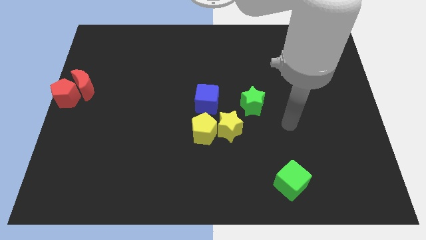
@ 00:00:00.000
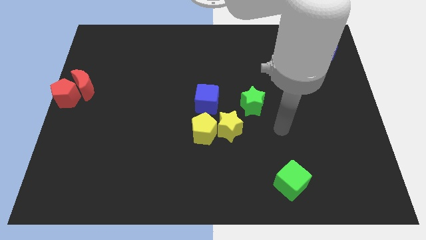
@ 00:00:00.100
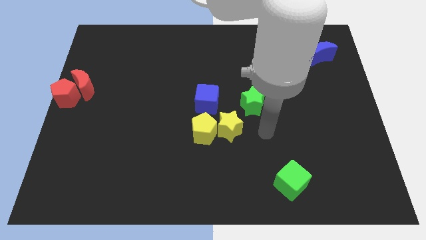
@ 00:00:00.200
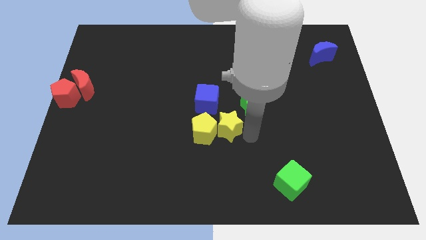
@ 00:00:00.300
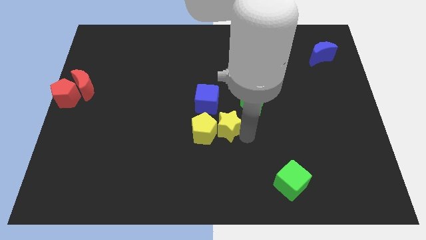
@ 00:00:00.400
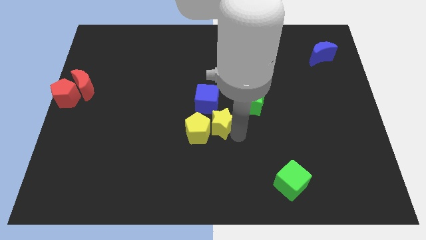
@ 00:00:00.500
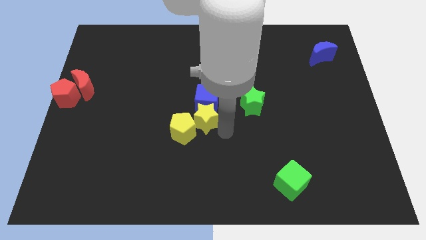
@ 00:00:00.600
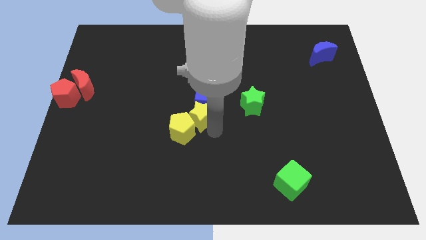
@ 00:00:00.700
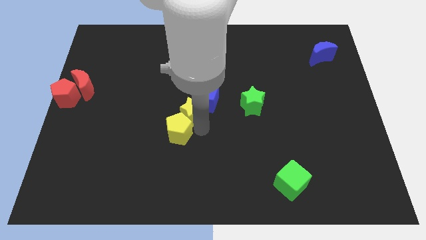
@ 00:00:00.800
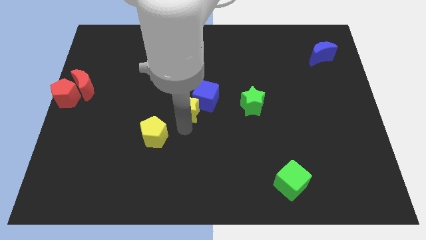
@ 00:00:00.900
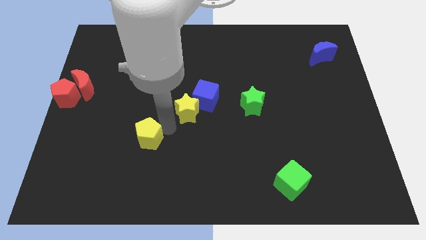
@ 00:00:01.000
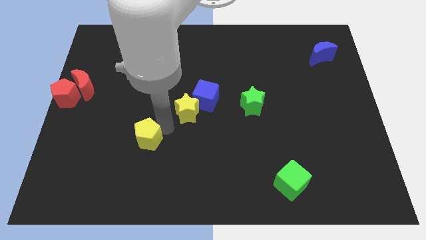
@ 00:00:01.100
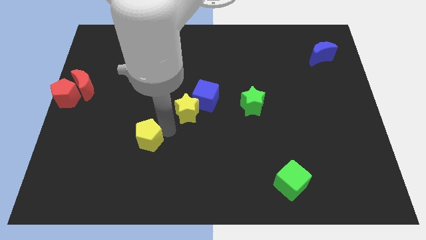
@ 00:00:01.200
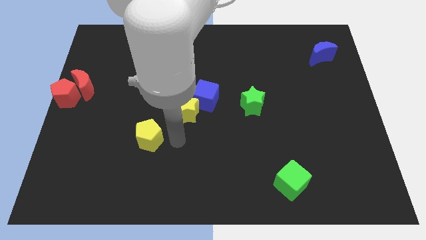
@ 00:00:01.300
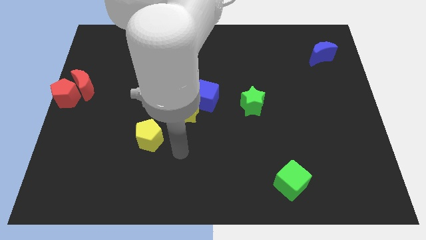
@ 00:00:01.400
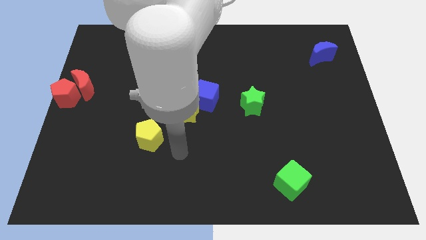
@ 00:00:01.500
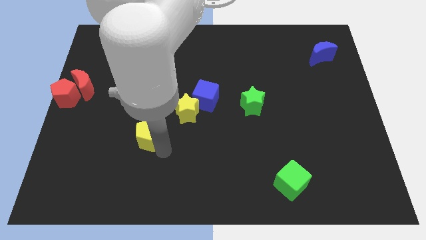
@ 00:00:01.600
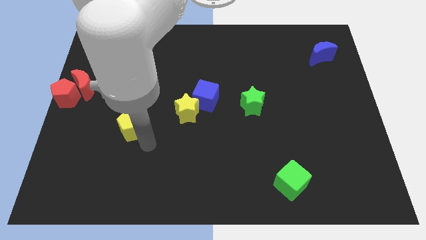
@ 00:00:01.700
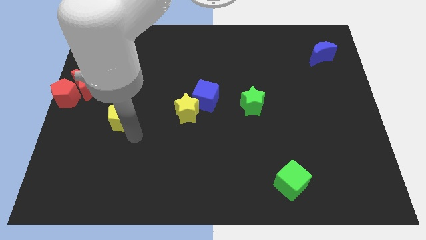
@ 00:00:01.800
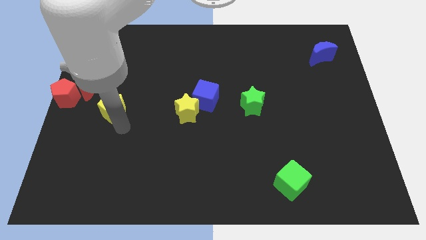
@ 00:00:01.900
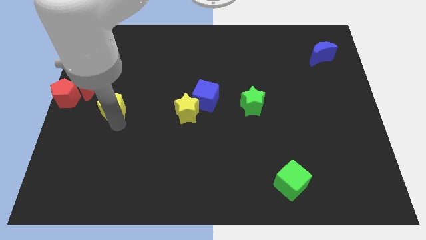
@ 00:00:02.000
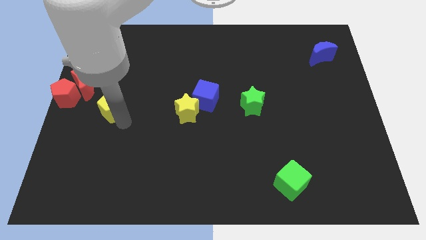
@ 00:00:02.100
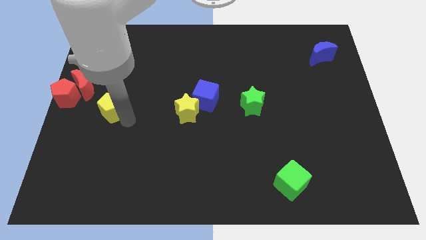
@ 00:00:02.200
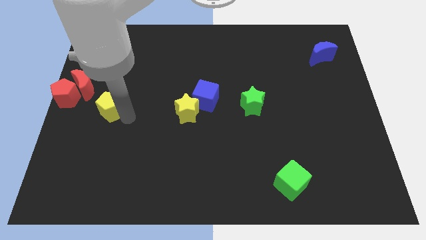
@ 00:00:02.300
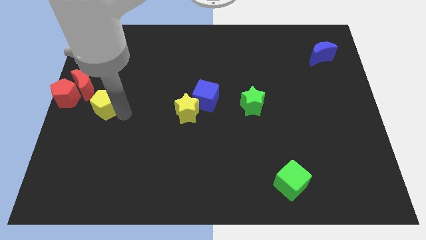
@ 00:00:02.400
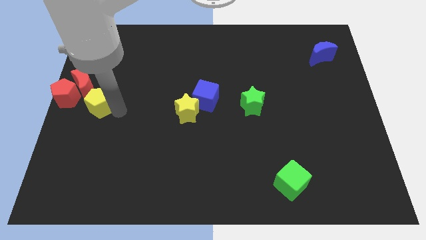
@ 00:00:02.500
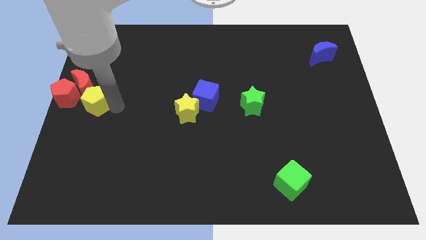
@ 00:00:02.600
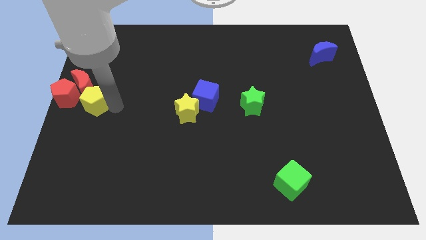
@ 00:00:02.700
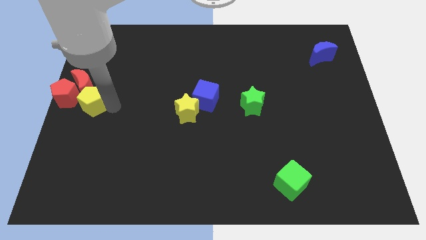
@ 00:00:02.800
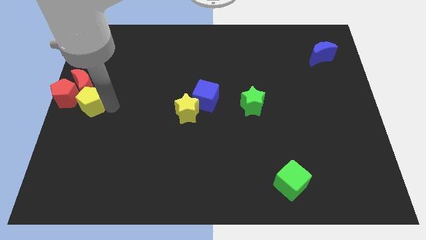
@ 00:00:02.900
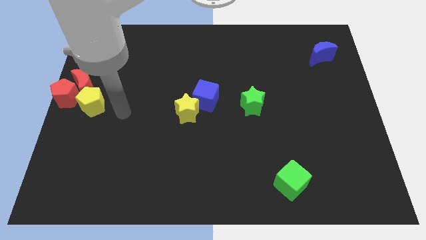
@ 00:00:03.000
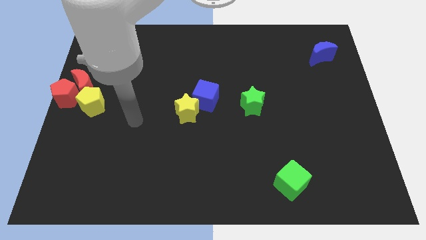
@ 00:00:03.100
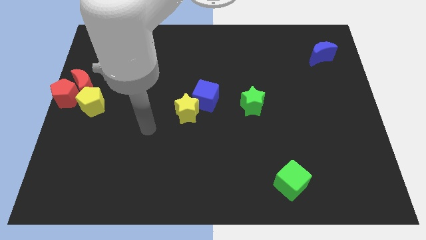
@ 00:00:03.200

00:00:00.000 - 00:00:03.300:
separate the yellow pentagon and the yellow star

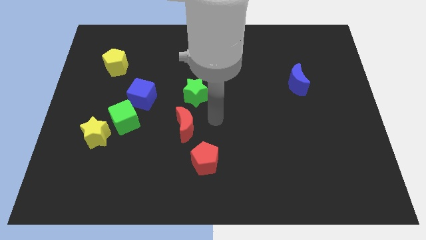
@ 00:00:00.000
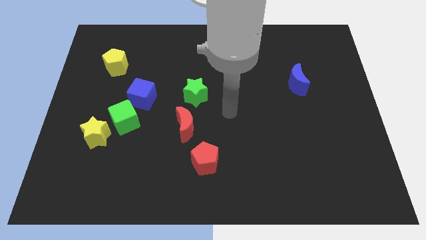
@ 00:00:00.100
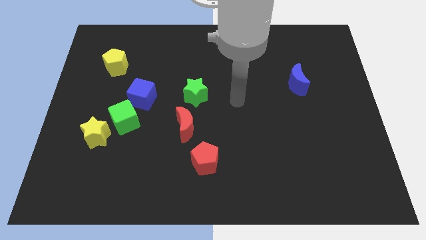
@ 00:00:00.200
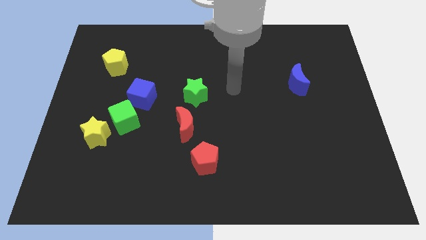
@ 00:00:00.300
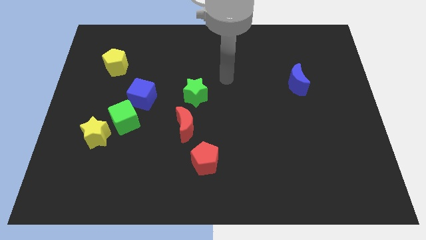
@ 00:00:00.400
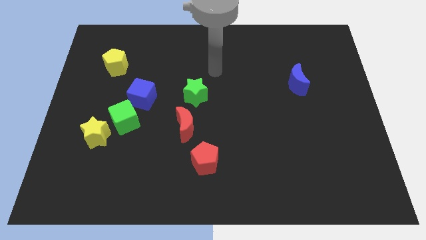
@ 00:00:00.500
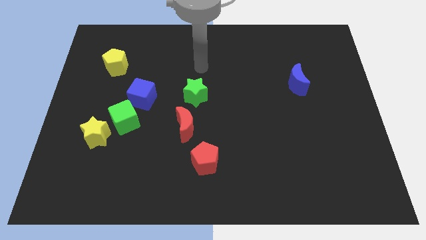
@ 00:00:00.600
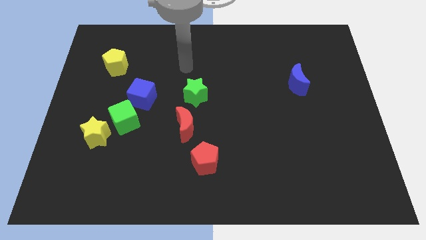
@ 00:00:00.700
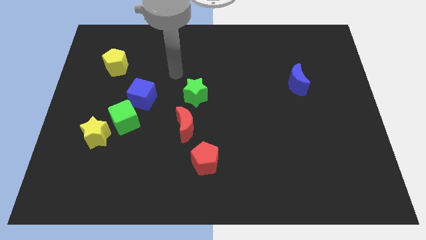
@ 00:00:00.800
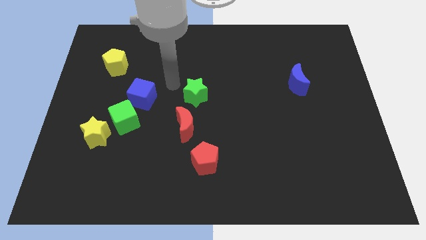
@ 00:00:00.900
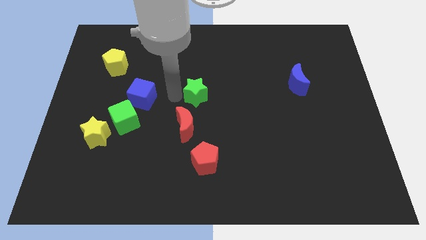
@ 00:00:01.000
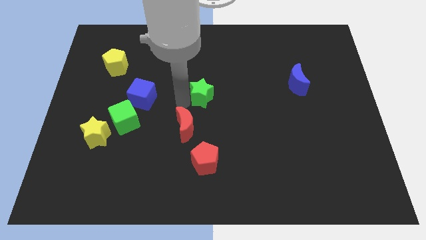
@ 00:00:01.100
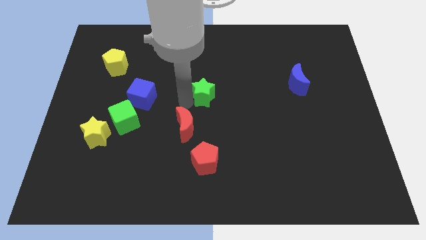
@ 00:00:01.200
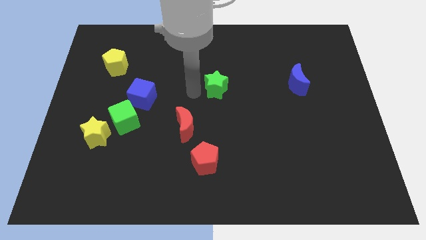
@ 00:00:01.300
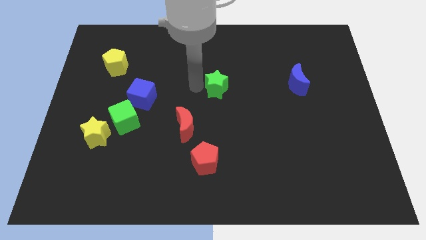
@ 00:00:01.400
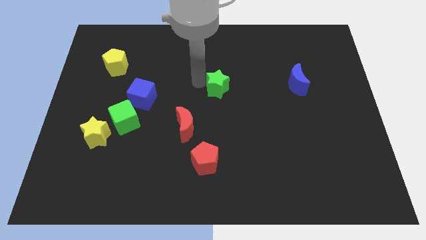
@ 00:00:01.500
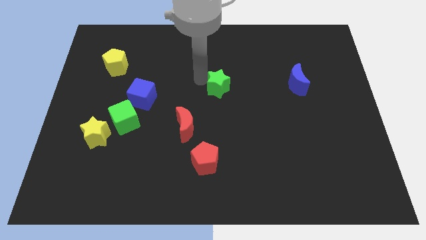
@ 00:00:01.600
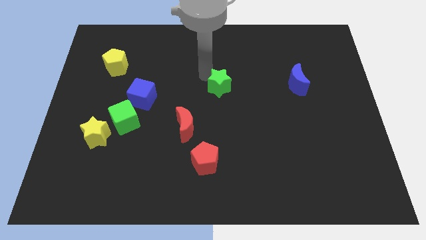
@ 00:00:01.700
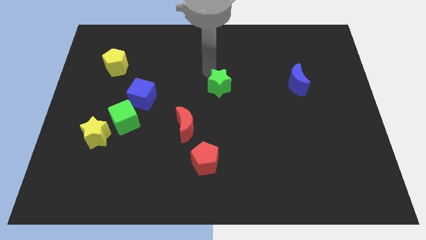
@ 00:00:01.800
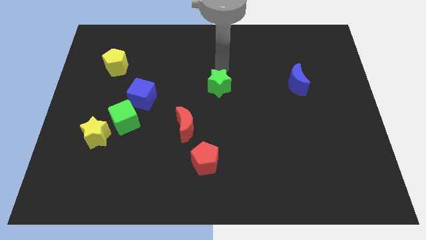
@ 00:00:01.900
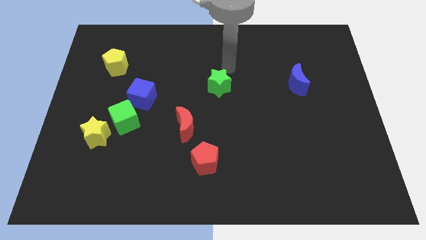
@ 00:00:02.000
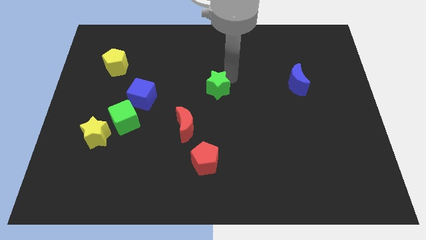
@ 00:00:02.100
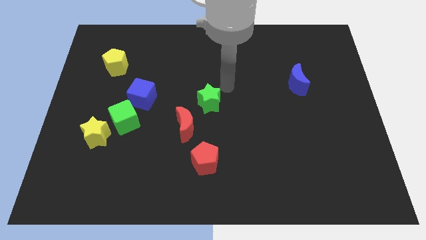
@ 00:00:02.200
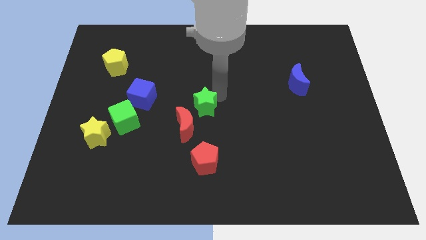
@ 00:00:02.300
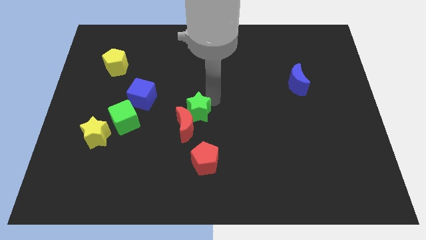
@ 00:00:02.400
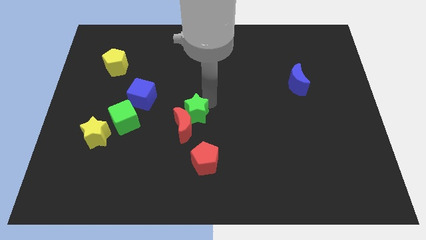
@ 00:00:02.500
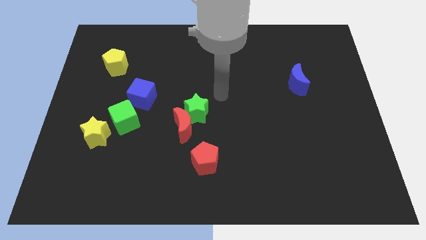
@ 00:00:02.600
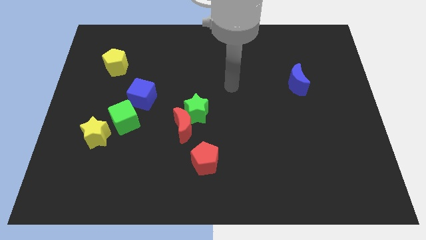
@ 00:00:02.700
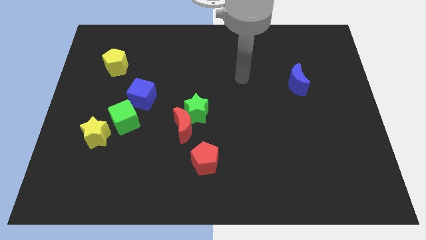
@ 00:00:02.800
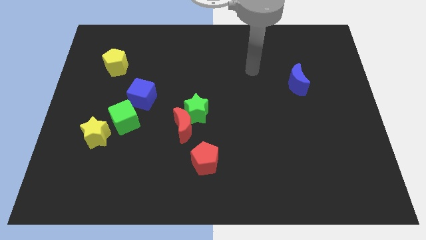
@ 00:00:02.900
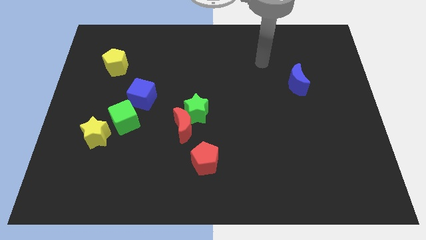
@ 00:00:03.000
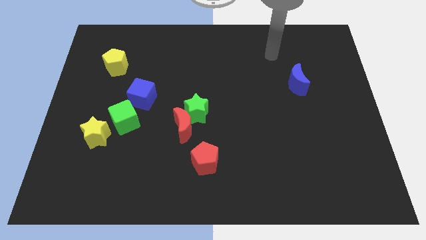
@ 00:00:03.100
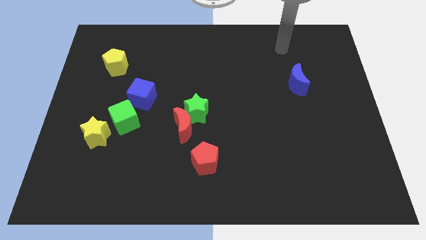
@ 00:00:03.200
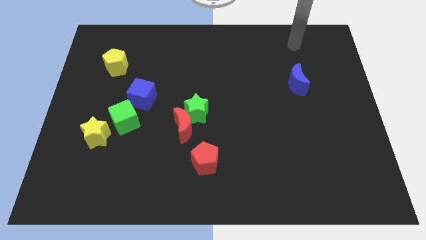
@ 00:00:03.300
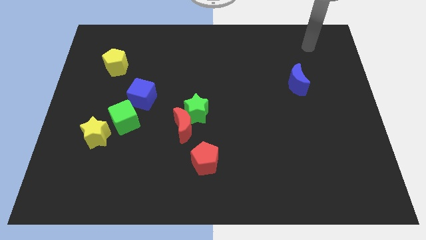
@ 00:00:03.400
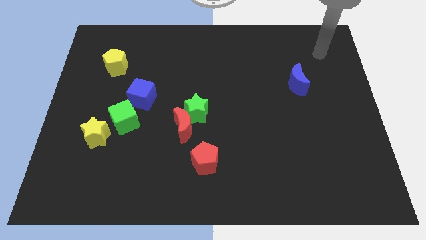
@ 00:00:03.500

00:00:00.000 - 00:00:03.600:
push the green star into the red moon

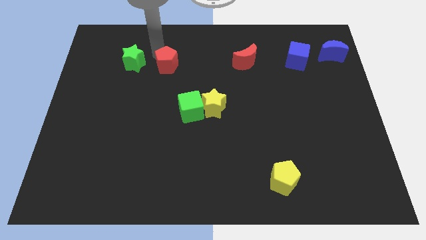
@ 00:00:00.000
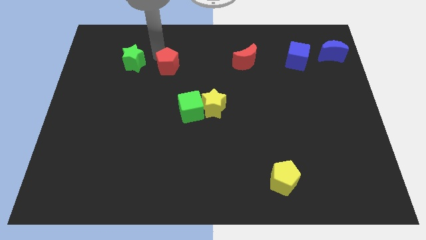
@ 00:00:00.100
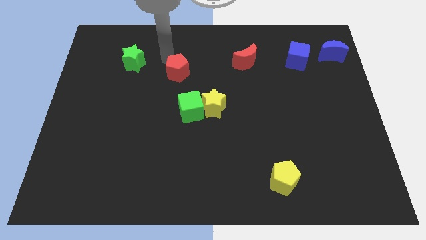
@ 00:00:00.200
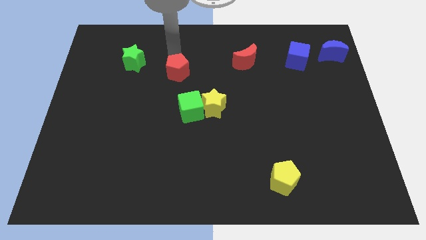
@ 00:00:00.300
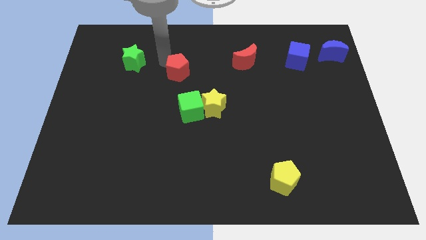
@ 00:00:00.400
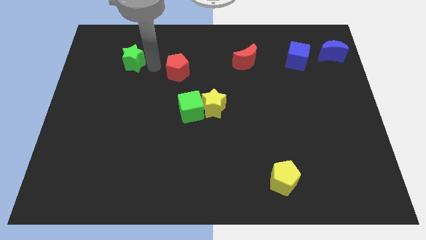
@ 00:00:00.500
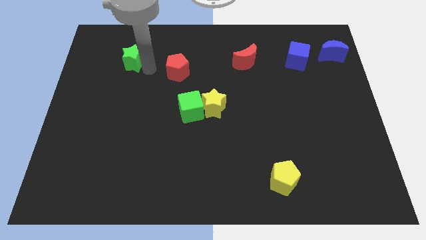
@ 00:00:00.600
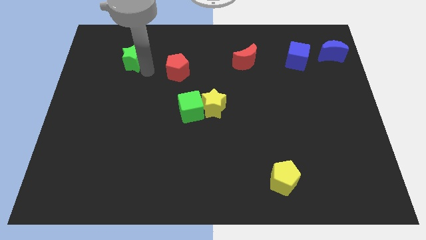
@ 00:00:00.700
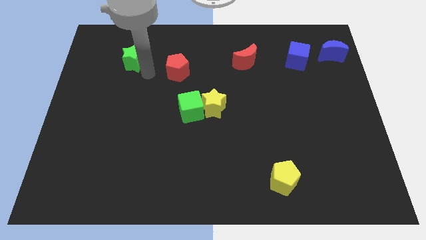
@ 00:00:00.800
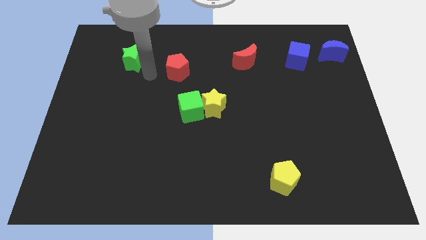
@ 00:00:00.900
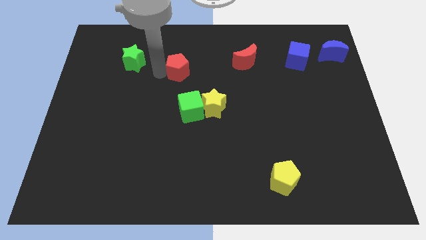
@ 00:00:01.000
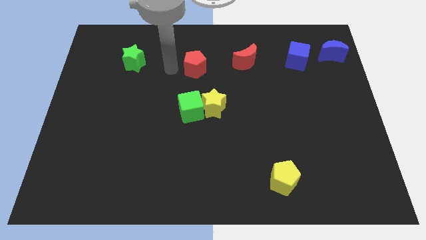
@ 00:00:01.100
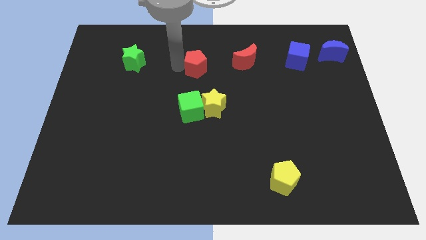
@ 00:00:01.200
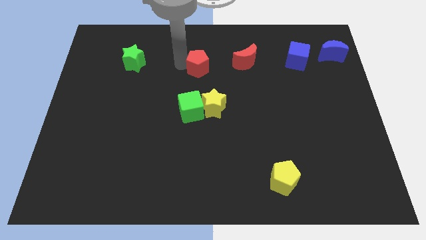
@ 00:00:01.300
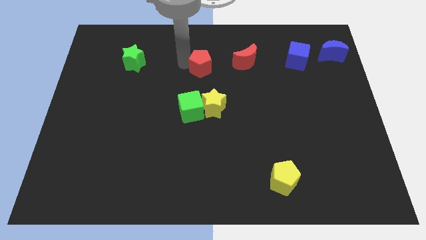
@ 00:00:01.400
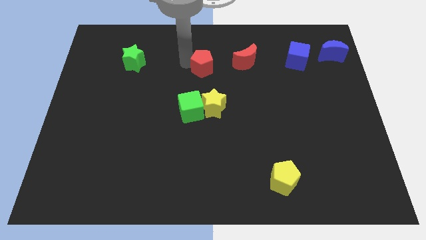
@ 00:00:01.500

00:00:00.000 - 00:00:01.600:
drag the red pentagon towards left side of the red crescent

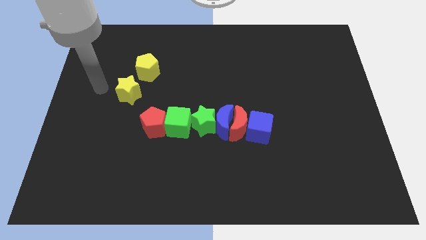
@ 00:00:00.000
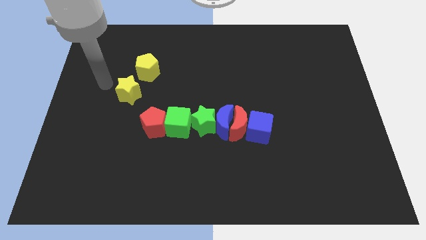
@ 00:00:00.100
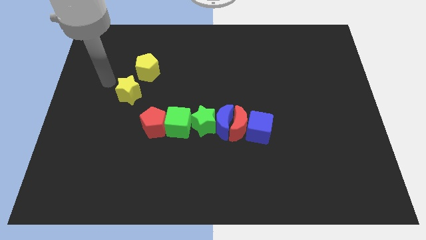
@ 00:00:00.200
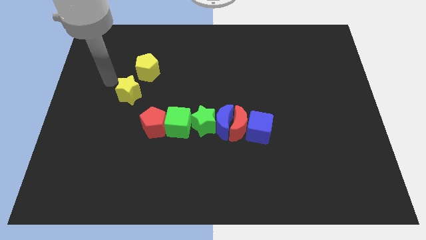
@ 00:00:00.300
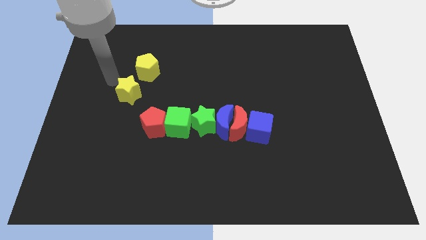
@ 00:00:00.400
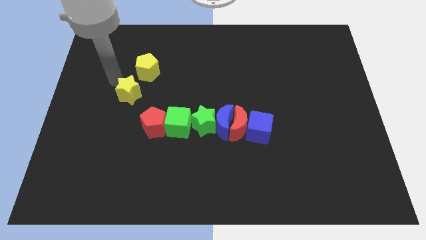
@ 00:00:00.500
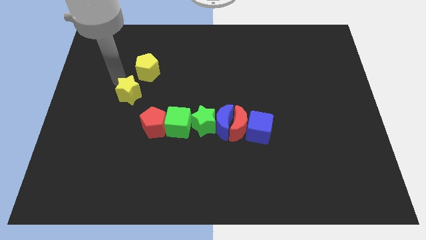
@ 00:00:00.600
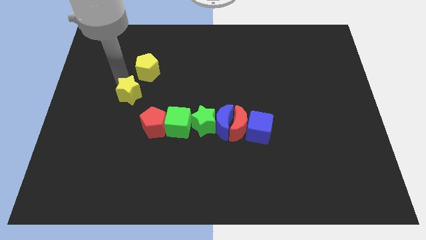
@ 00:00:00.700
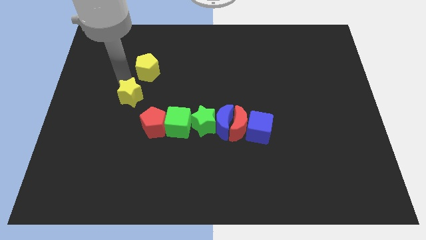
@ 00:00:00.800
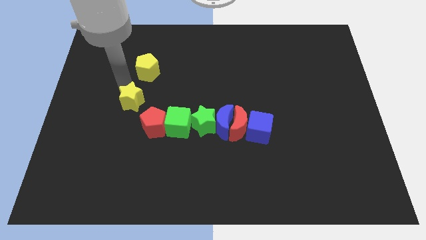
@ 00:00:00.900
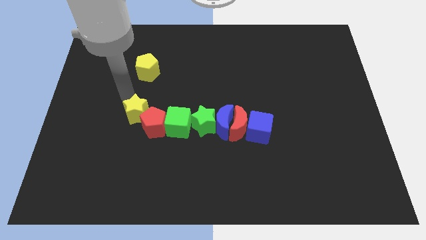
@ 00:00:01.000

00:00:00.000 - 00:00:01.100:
slightly push yellow star diagonal top left of the red pentagon
